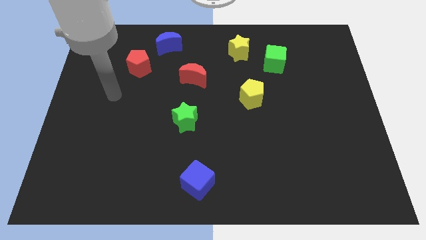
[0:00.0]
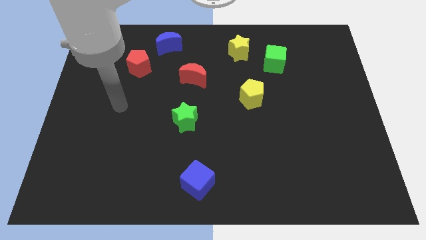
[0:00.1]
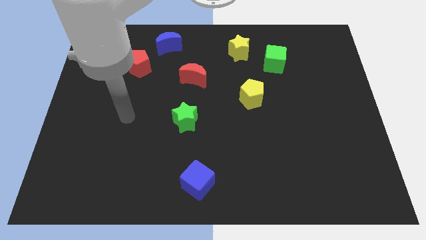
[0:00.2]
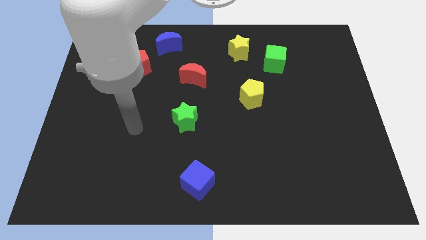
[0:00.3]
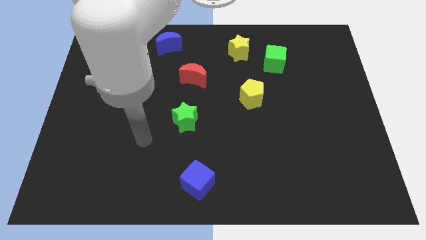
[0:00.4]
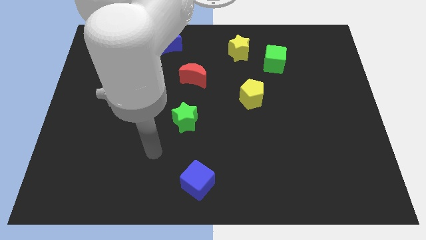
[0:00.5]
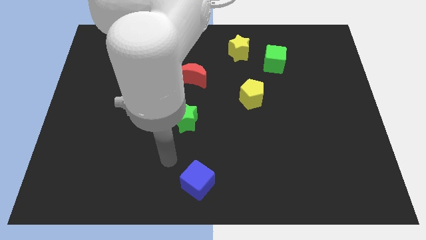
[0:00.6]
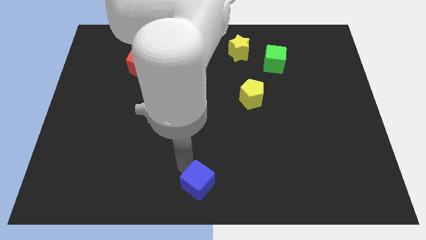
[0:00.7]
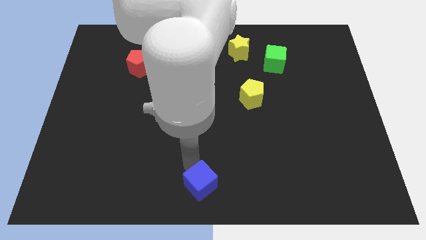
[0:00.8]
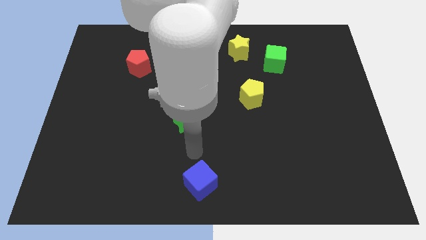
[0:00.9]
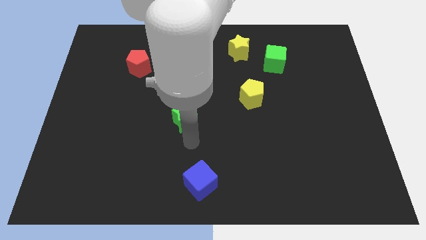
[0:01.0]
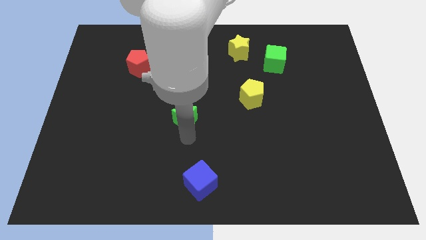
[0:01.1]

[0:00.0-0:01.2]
place the blue cube at the bottom center of the board

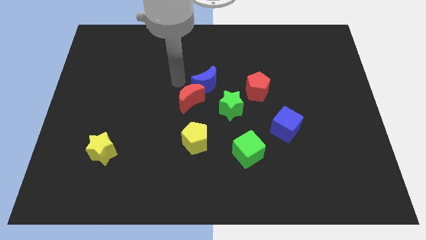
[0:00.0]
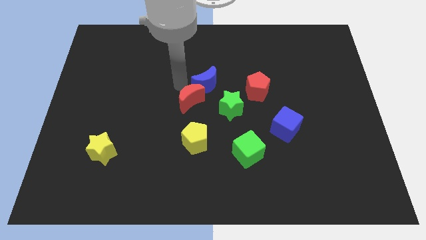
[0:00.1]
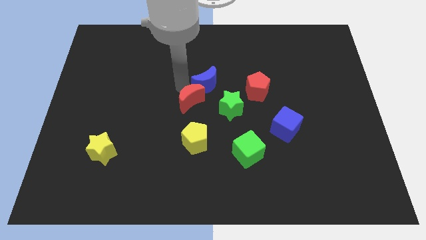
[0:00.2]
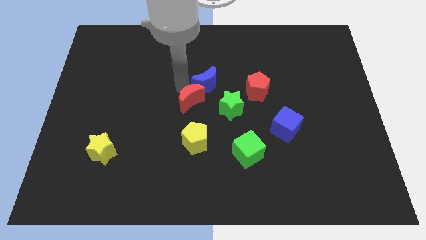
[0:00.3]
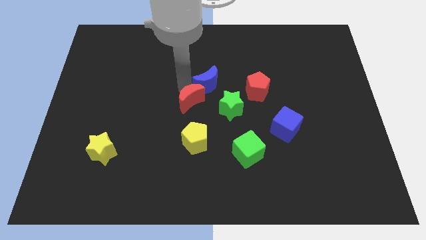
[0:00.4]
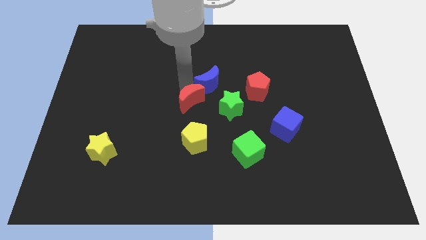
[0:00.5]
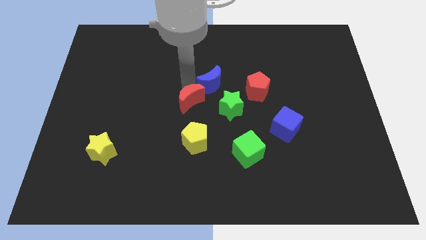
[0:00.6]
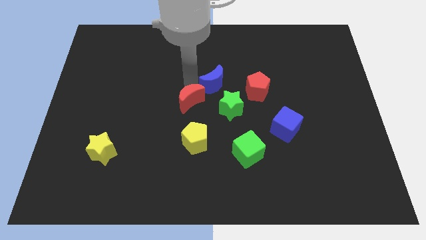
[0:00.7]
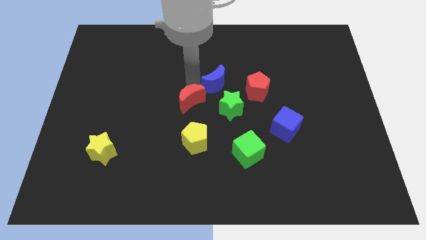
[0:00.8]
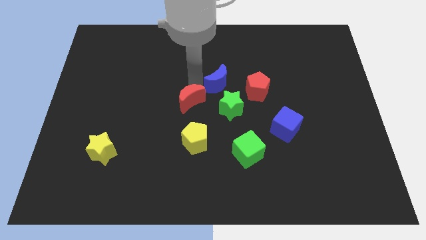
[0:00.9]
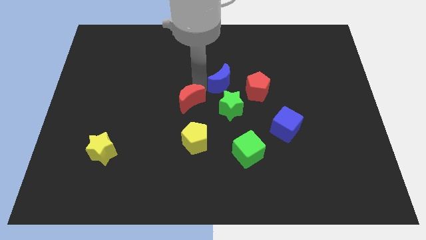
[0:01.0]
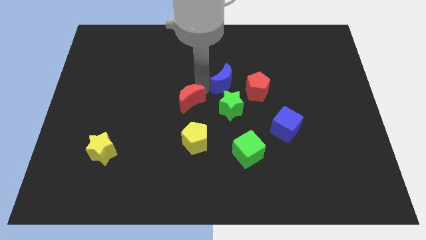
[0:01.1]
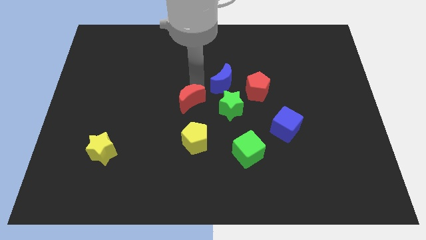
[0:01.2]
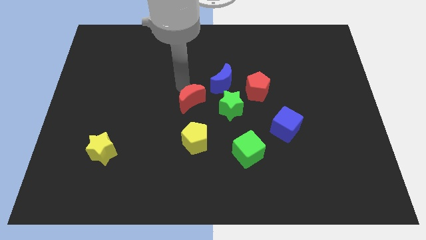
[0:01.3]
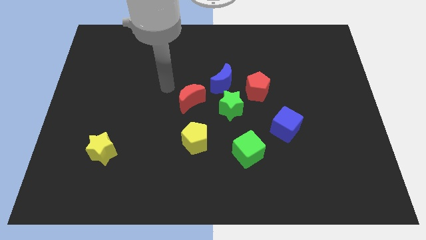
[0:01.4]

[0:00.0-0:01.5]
place blue moon to top of green star

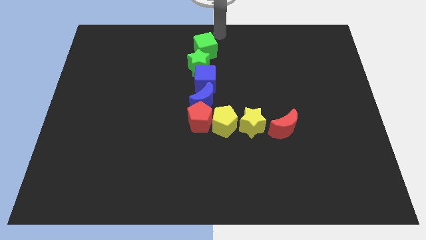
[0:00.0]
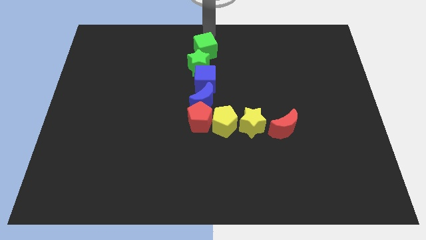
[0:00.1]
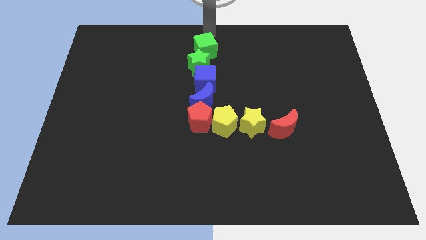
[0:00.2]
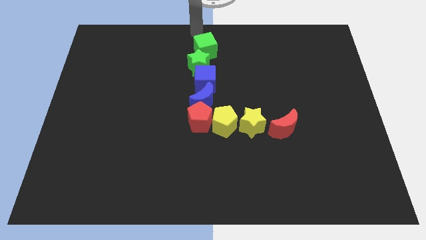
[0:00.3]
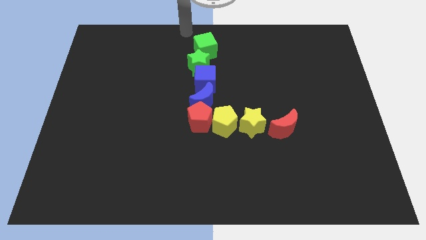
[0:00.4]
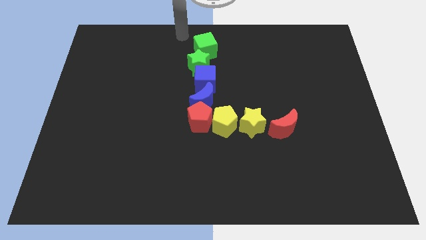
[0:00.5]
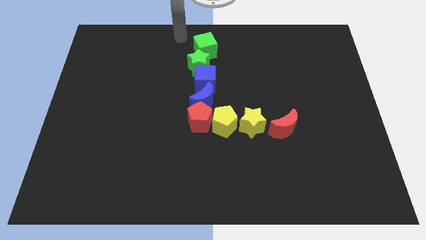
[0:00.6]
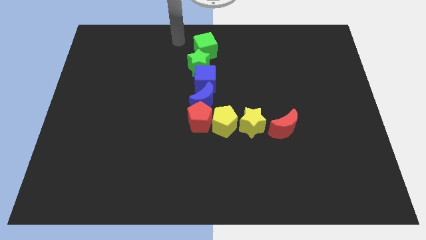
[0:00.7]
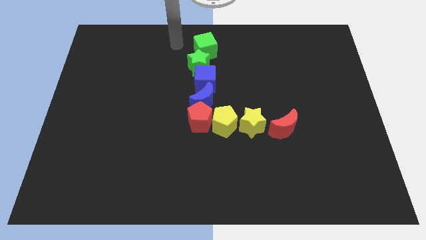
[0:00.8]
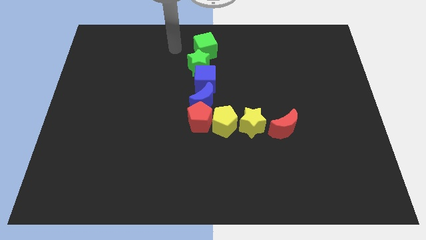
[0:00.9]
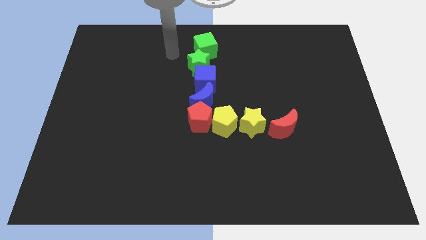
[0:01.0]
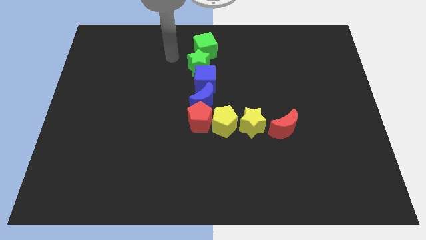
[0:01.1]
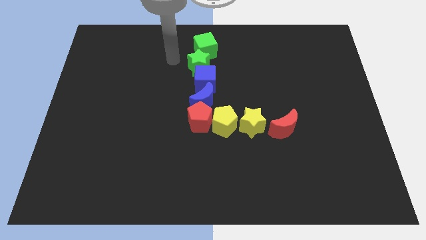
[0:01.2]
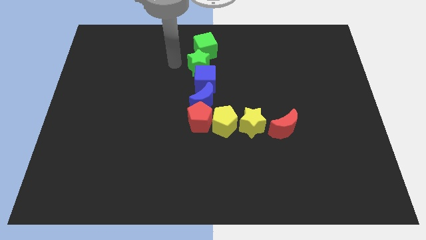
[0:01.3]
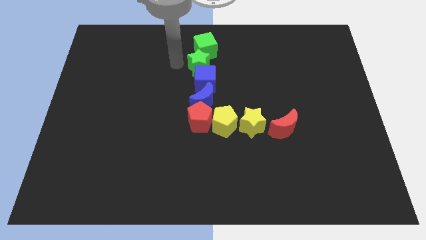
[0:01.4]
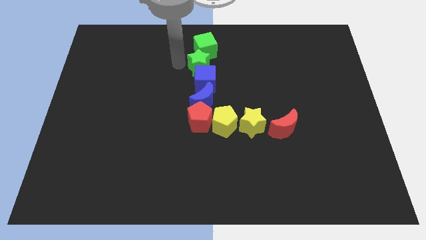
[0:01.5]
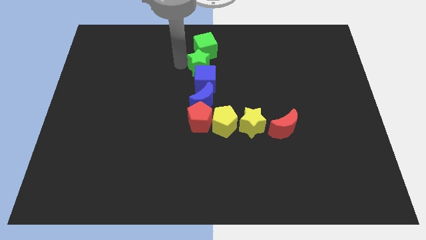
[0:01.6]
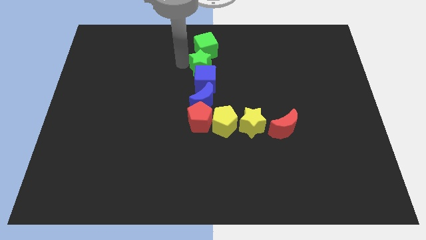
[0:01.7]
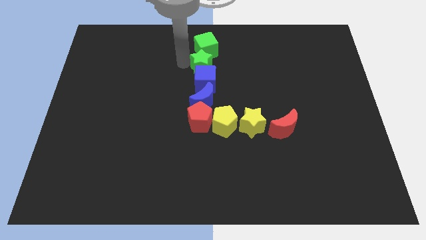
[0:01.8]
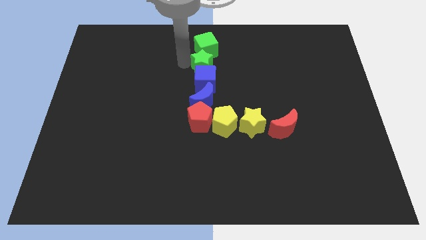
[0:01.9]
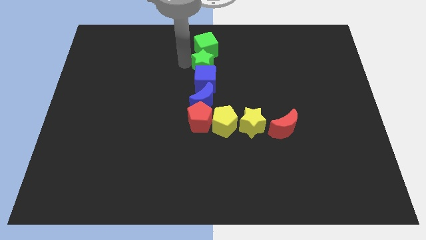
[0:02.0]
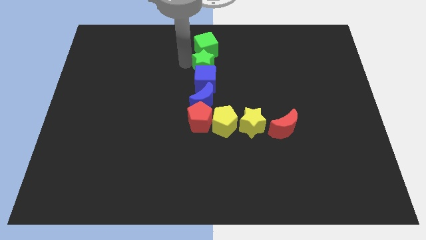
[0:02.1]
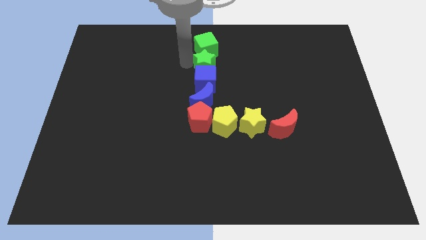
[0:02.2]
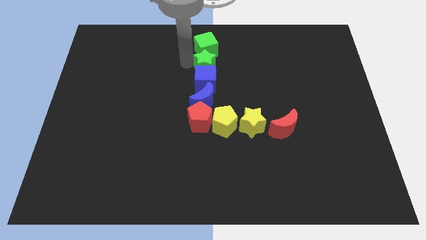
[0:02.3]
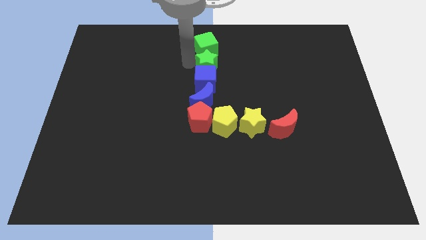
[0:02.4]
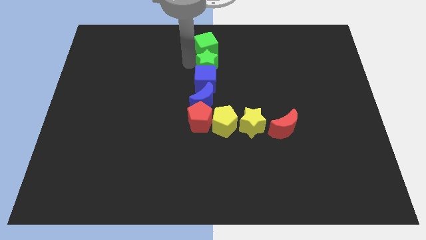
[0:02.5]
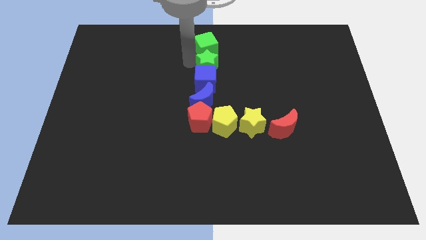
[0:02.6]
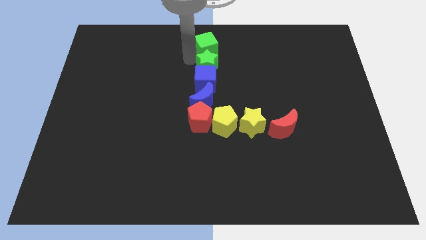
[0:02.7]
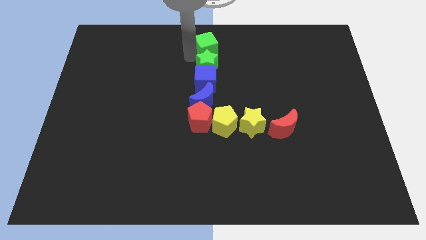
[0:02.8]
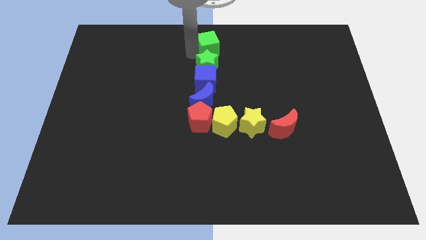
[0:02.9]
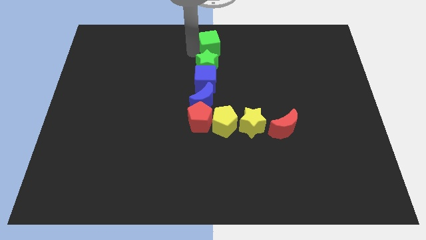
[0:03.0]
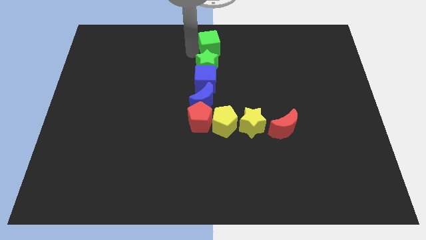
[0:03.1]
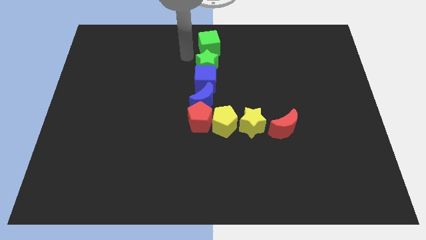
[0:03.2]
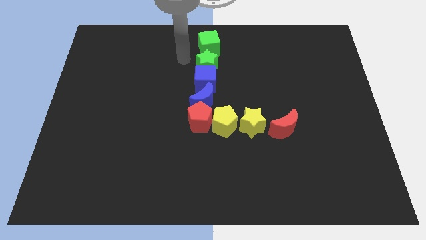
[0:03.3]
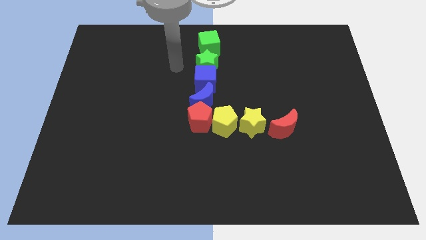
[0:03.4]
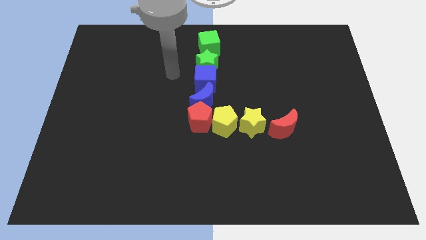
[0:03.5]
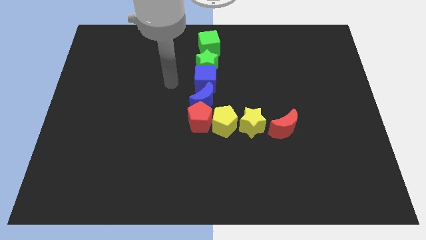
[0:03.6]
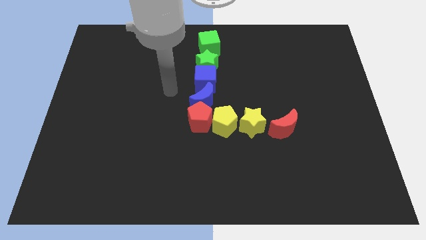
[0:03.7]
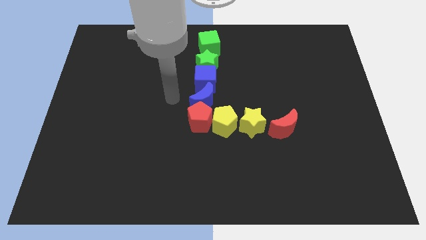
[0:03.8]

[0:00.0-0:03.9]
adjust the green blocks to the right side slightly

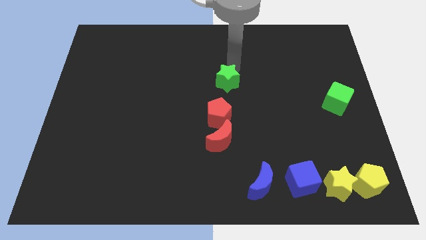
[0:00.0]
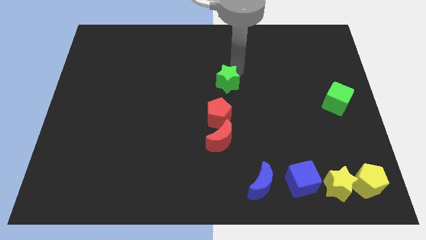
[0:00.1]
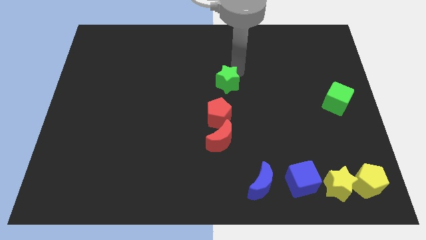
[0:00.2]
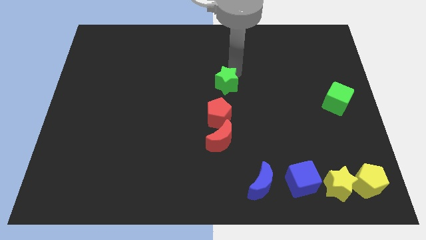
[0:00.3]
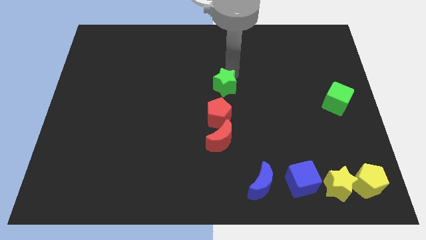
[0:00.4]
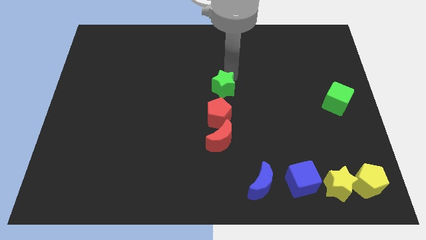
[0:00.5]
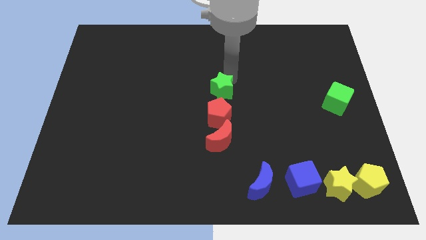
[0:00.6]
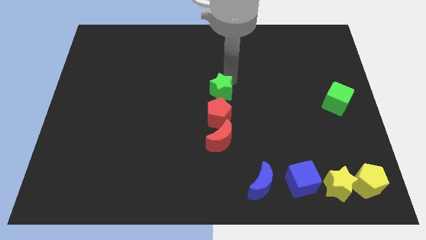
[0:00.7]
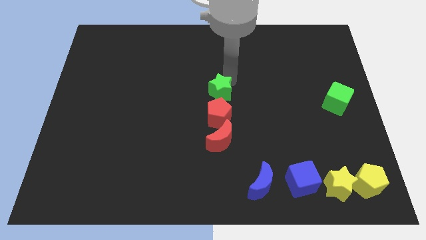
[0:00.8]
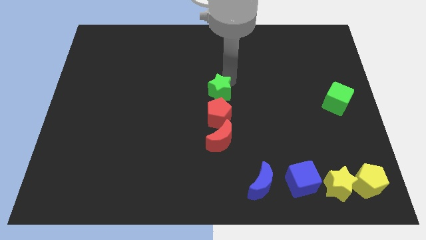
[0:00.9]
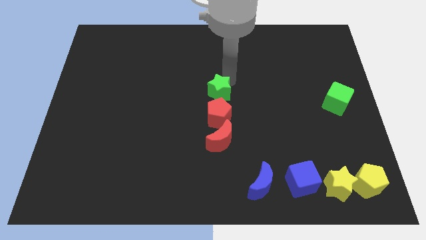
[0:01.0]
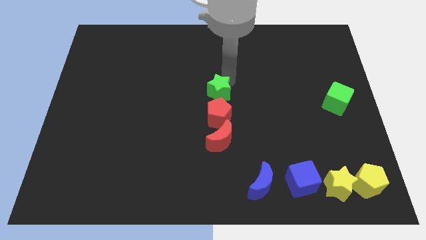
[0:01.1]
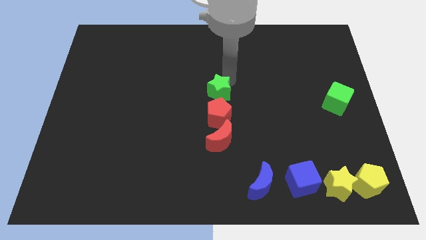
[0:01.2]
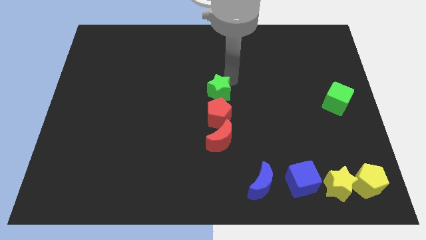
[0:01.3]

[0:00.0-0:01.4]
place the green star above the red pentagon

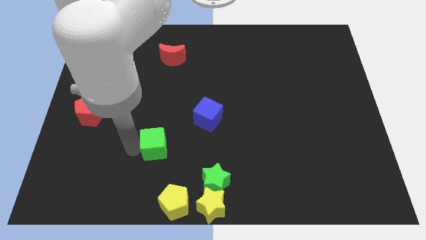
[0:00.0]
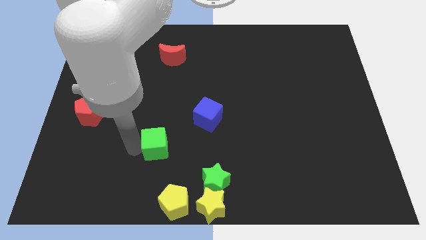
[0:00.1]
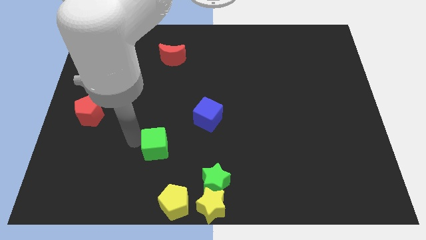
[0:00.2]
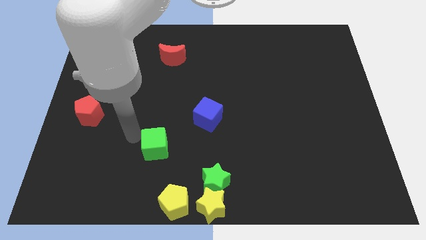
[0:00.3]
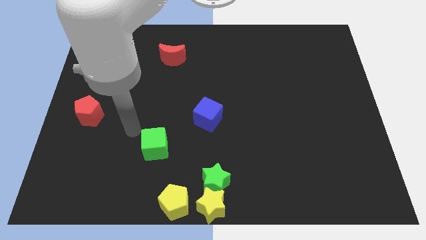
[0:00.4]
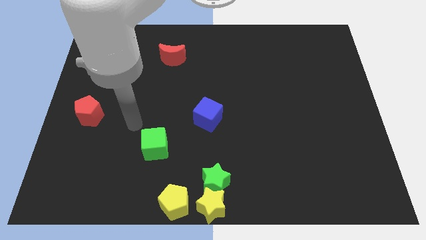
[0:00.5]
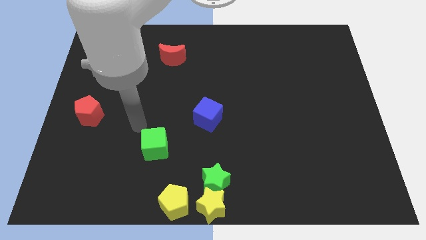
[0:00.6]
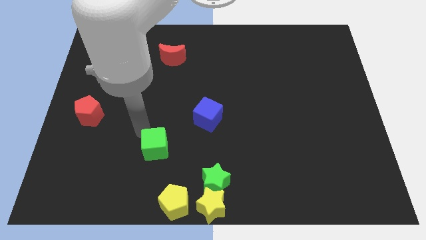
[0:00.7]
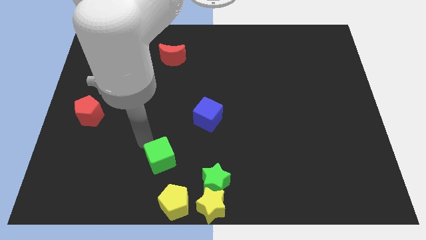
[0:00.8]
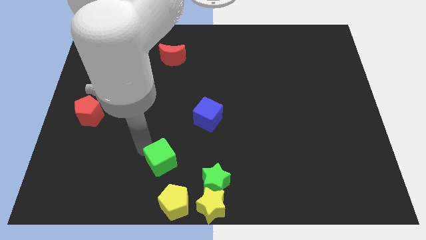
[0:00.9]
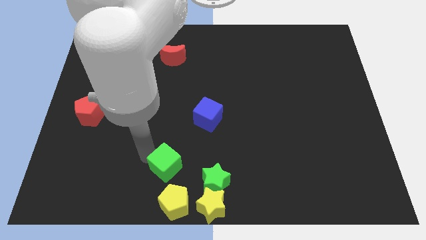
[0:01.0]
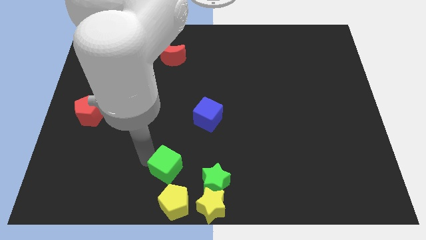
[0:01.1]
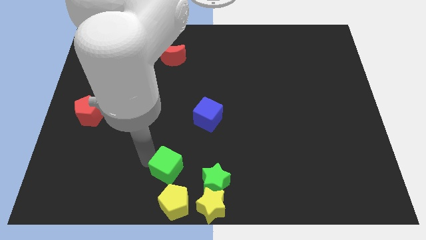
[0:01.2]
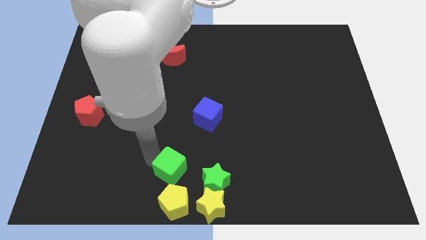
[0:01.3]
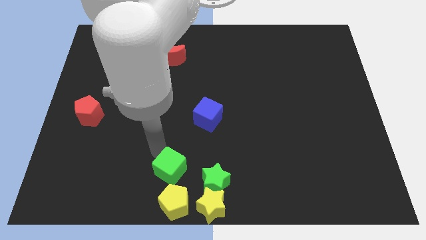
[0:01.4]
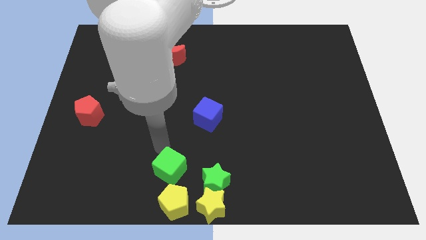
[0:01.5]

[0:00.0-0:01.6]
move the green cube to the top of the yellow pentagon
